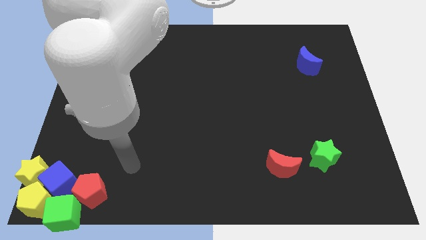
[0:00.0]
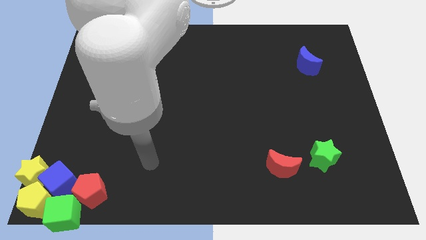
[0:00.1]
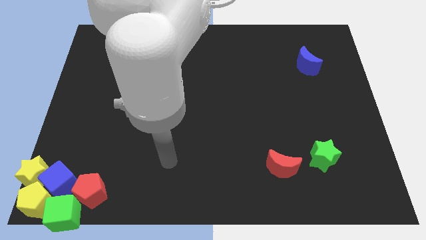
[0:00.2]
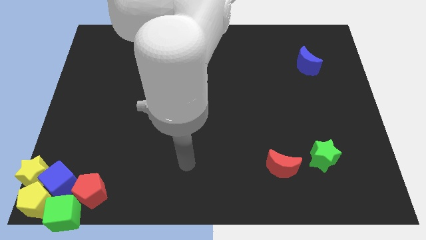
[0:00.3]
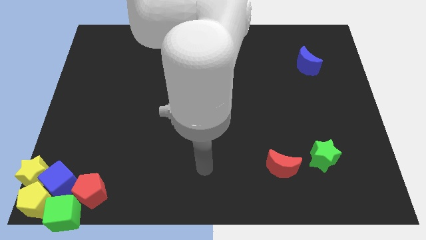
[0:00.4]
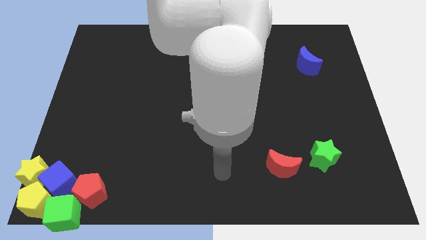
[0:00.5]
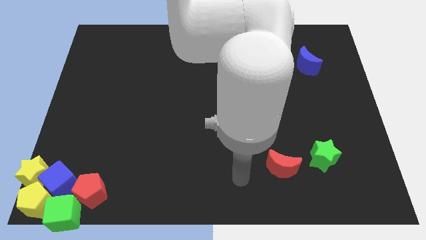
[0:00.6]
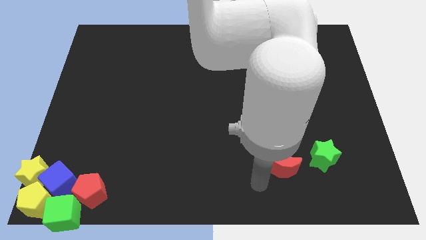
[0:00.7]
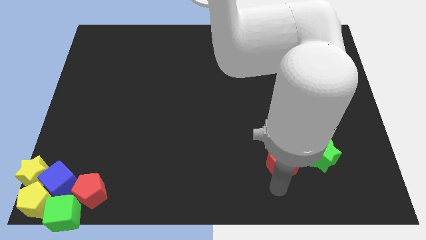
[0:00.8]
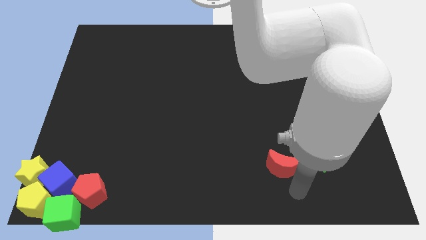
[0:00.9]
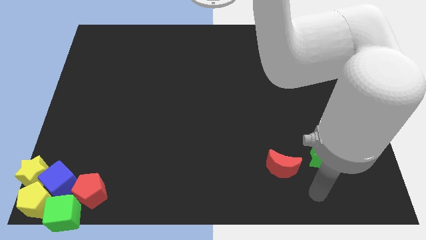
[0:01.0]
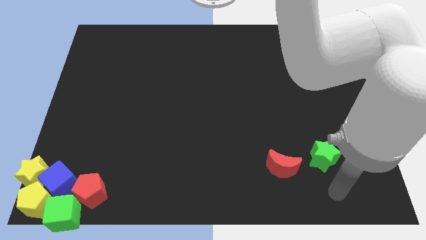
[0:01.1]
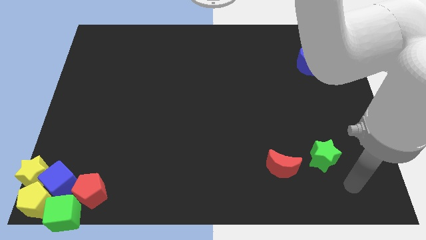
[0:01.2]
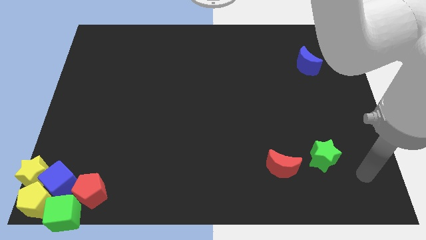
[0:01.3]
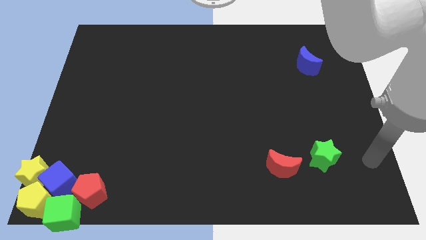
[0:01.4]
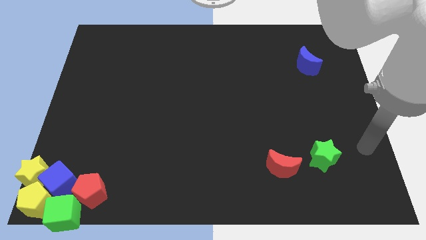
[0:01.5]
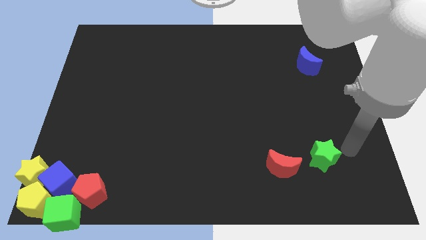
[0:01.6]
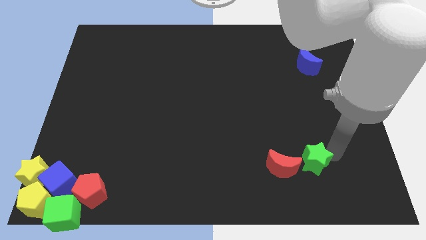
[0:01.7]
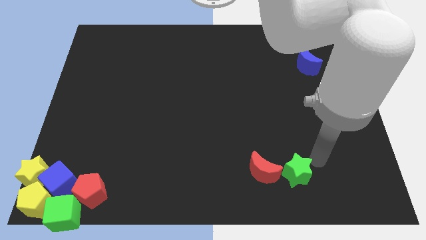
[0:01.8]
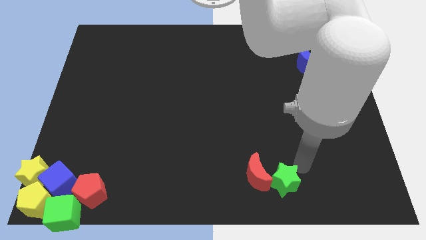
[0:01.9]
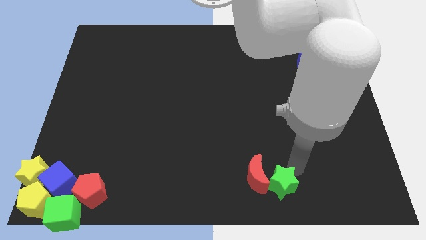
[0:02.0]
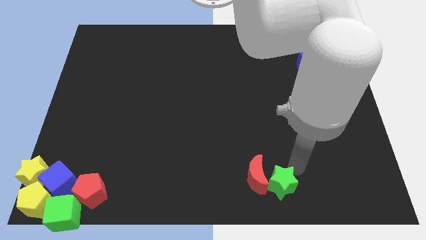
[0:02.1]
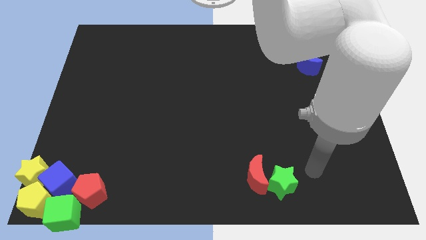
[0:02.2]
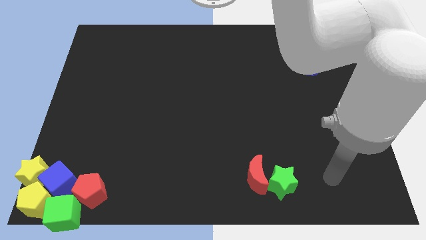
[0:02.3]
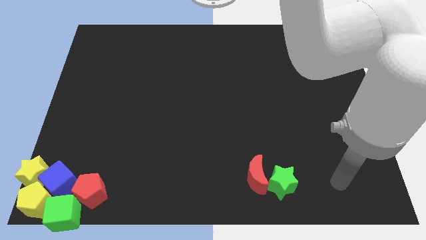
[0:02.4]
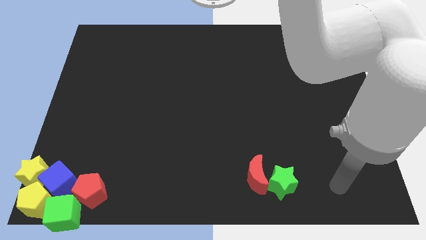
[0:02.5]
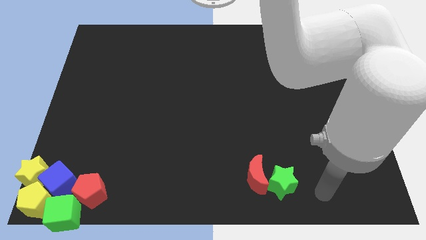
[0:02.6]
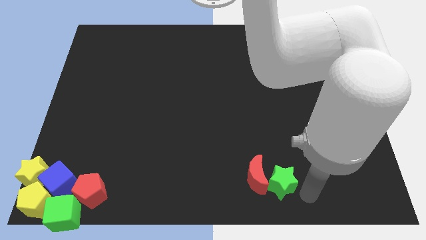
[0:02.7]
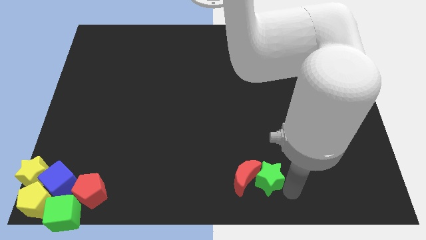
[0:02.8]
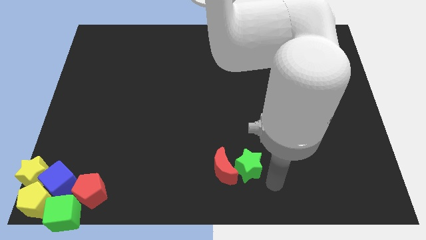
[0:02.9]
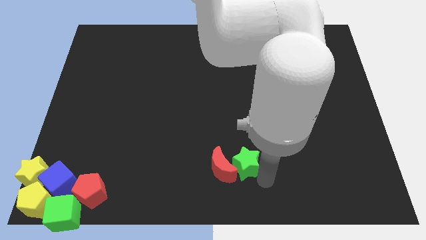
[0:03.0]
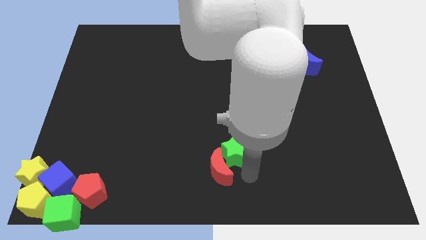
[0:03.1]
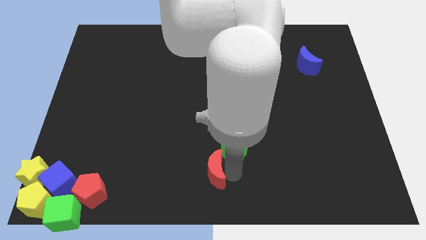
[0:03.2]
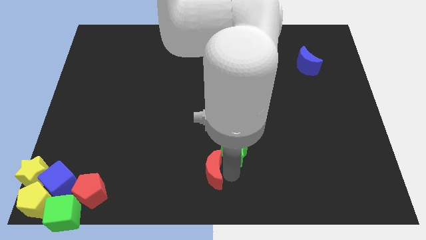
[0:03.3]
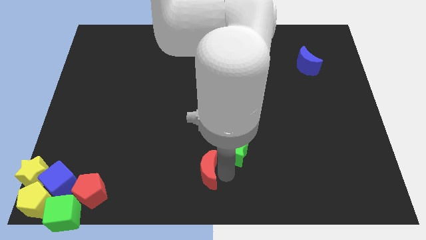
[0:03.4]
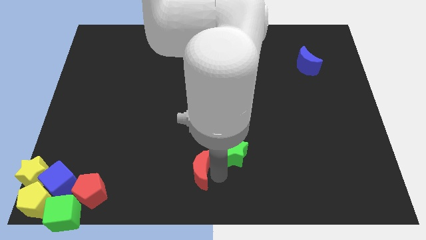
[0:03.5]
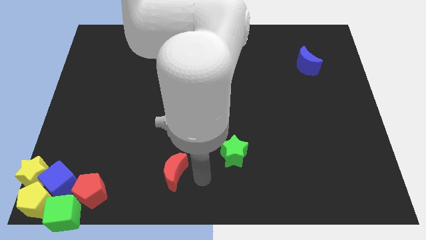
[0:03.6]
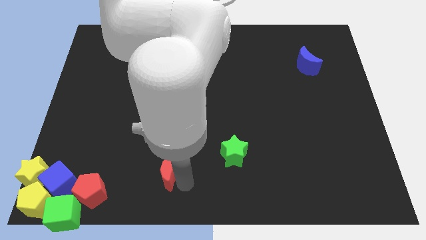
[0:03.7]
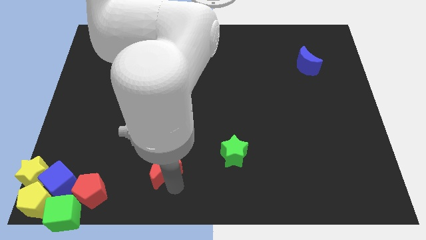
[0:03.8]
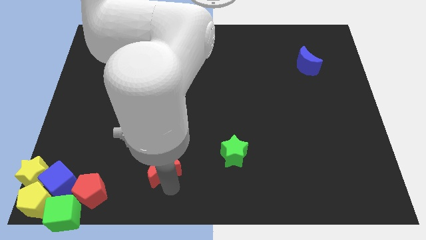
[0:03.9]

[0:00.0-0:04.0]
push the green star towards the left side of the board

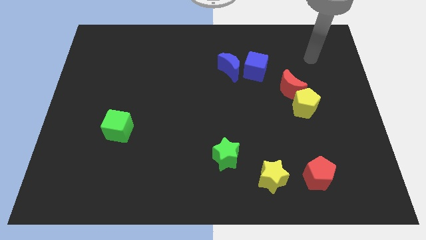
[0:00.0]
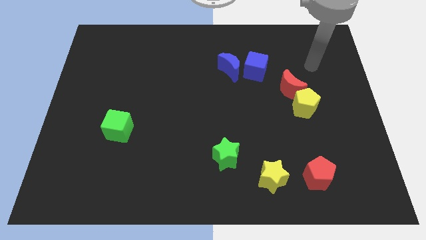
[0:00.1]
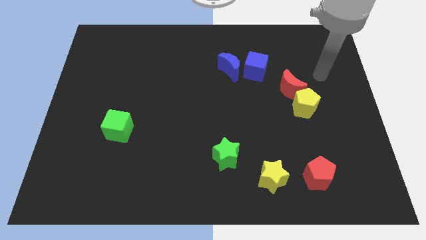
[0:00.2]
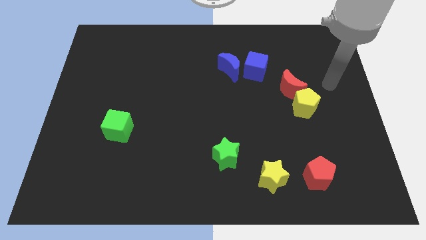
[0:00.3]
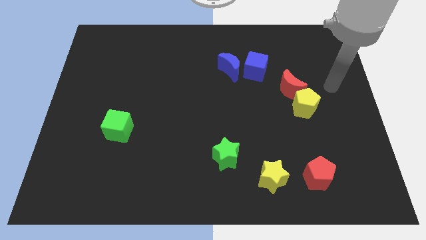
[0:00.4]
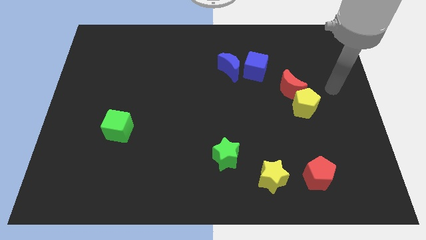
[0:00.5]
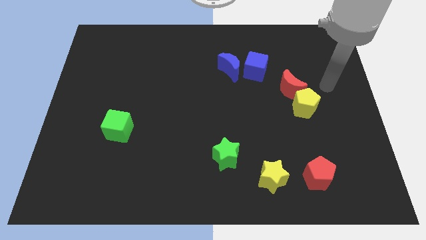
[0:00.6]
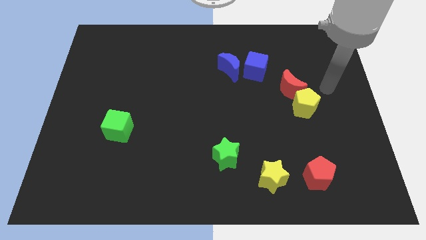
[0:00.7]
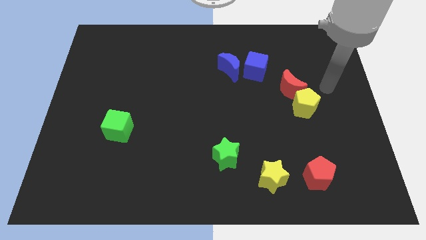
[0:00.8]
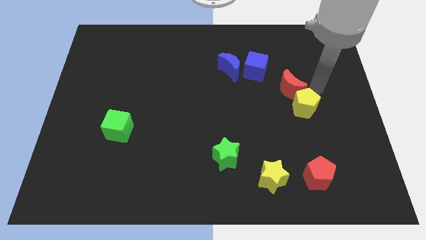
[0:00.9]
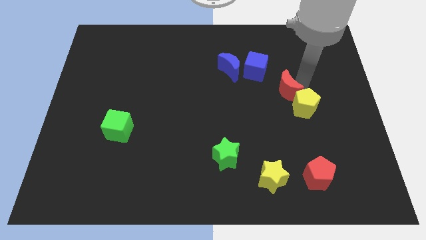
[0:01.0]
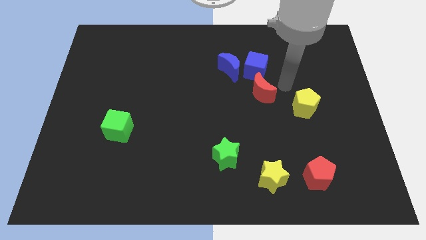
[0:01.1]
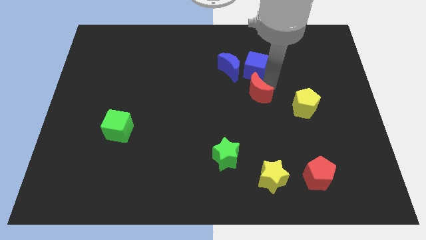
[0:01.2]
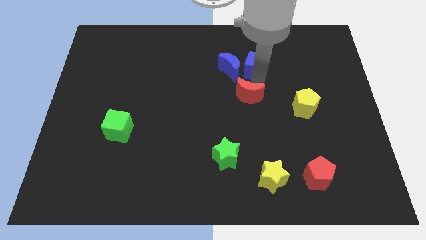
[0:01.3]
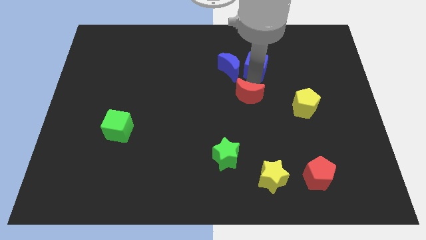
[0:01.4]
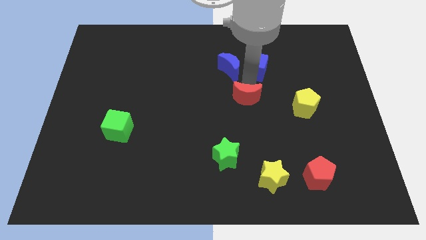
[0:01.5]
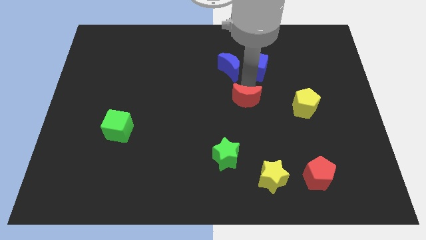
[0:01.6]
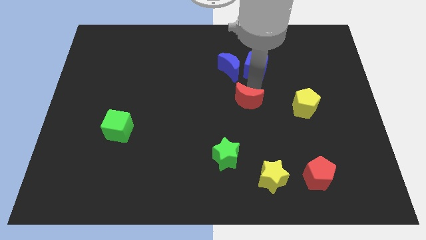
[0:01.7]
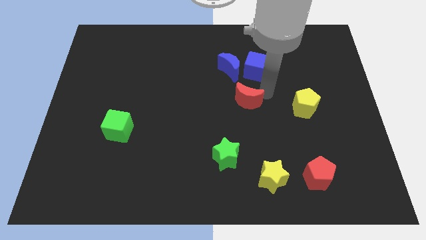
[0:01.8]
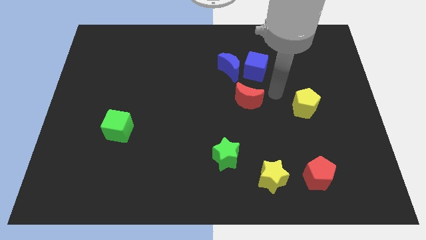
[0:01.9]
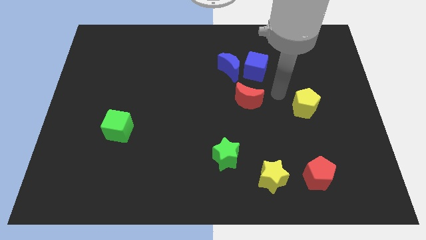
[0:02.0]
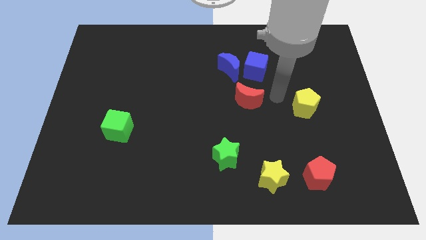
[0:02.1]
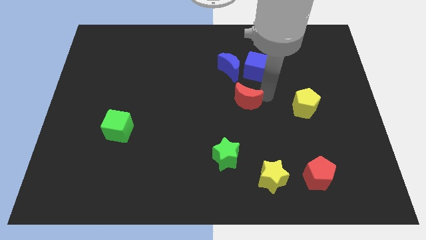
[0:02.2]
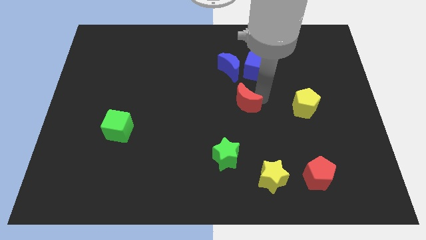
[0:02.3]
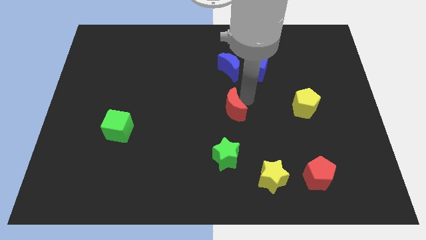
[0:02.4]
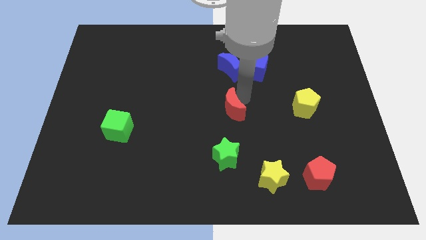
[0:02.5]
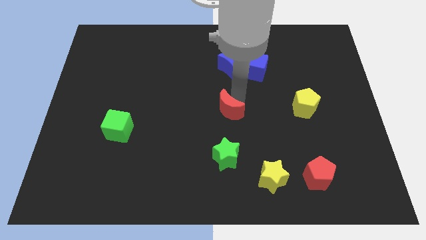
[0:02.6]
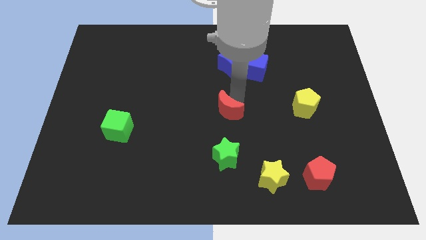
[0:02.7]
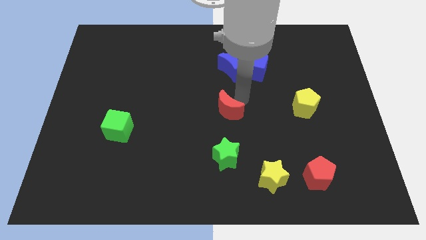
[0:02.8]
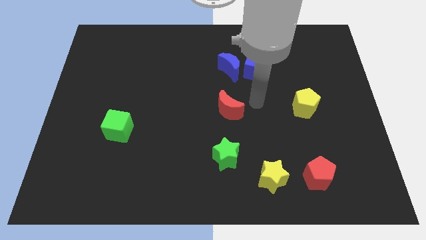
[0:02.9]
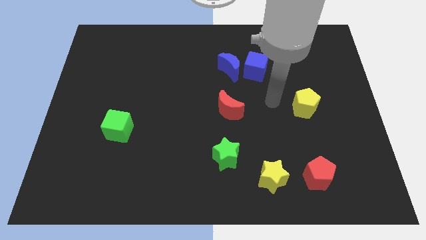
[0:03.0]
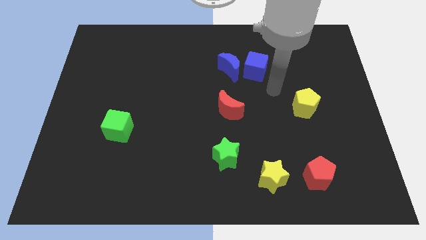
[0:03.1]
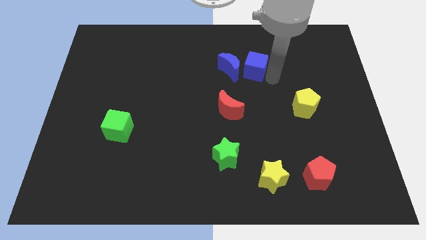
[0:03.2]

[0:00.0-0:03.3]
drag red moon towards center of the board

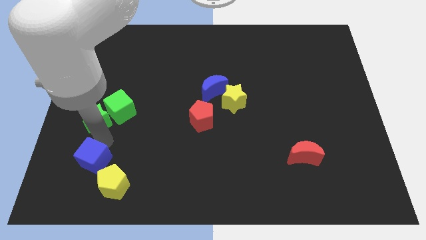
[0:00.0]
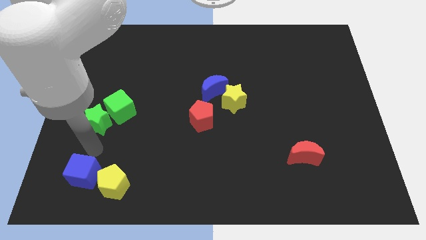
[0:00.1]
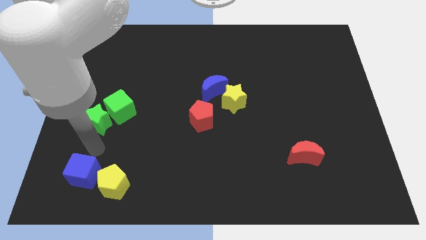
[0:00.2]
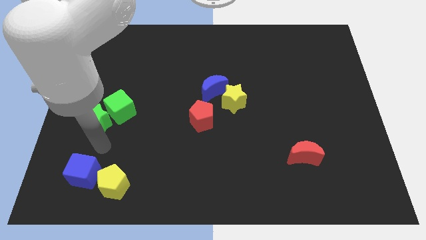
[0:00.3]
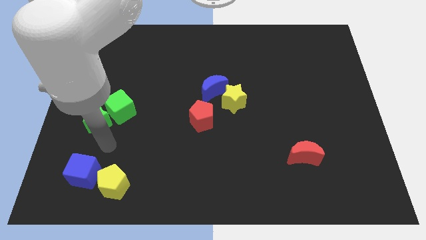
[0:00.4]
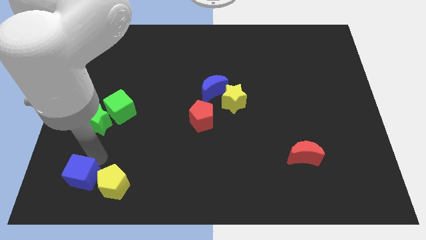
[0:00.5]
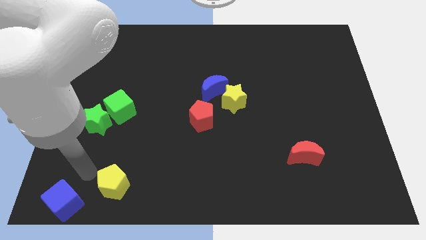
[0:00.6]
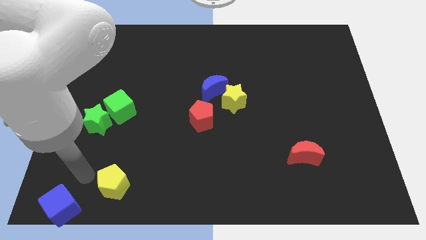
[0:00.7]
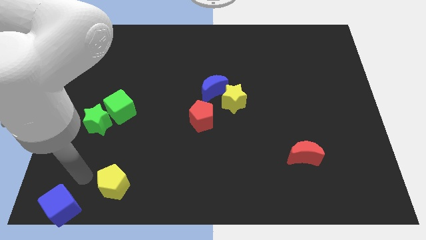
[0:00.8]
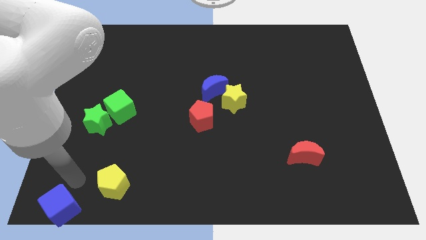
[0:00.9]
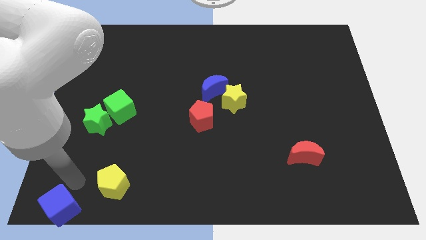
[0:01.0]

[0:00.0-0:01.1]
push the blue cube towards the bottom left of the board

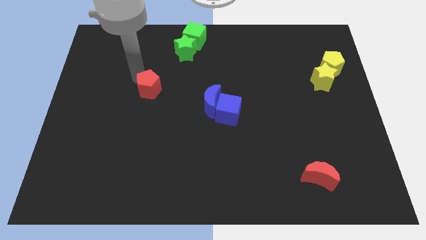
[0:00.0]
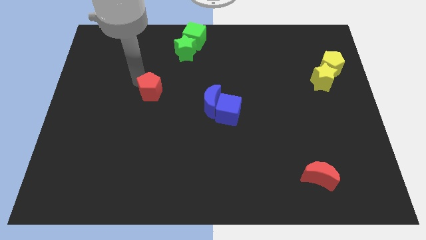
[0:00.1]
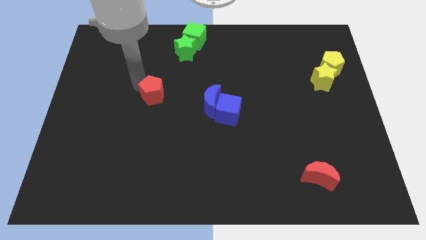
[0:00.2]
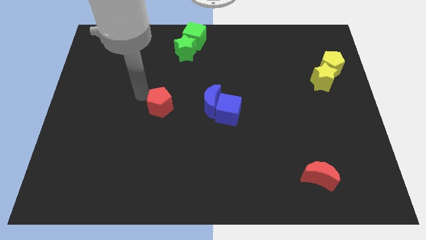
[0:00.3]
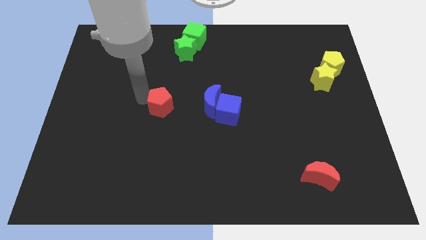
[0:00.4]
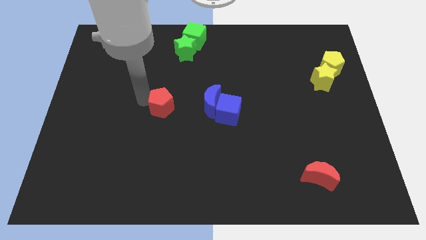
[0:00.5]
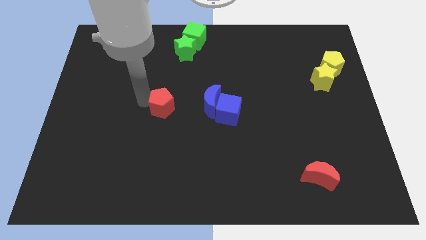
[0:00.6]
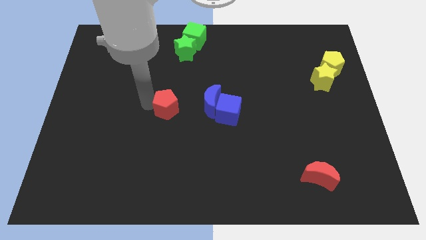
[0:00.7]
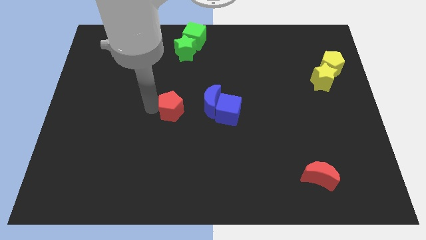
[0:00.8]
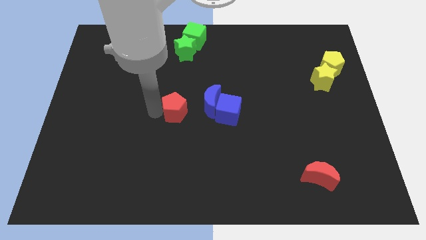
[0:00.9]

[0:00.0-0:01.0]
move the red pentagon to the center
